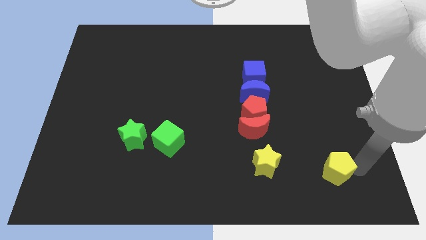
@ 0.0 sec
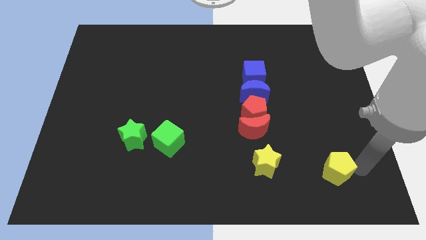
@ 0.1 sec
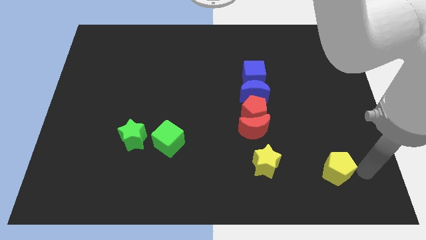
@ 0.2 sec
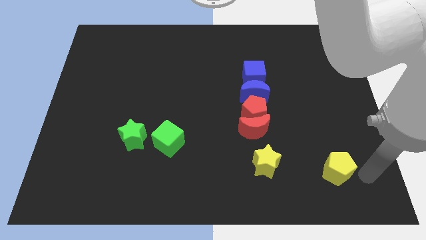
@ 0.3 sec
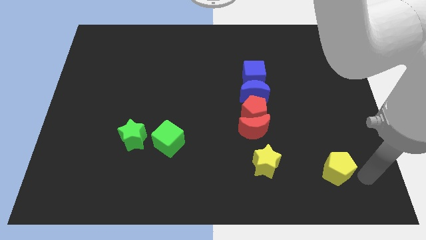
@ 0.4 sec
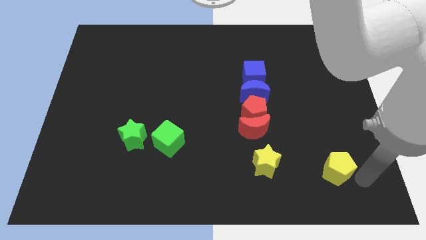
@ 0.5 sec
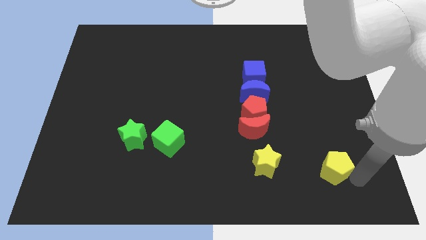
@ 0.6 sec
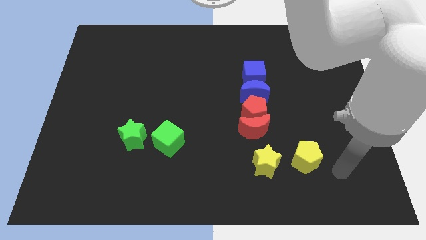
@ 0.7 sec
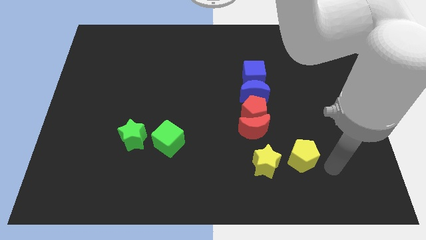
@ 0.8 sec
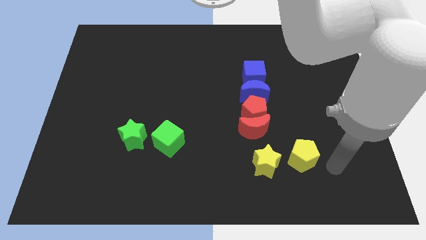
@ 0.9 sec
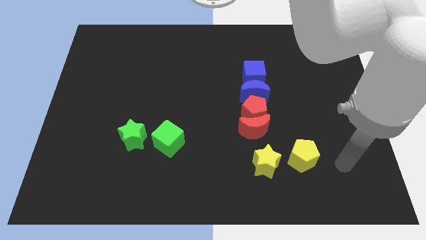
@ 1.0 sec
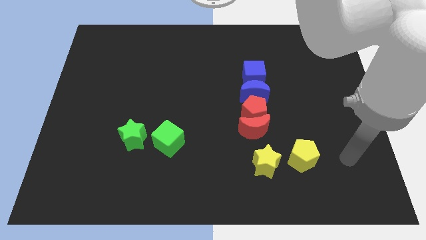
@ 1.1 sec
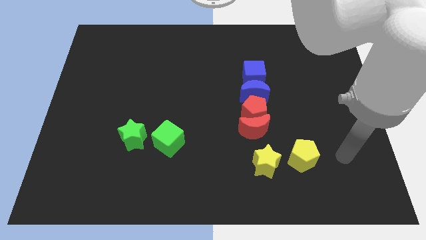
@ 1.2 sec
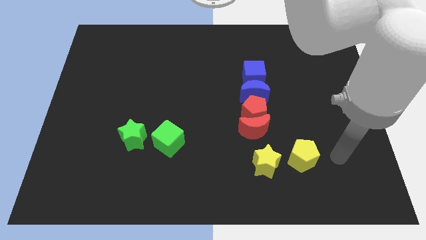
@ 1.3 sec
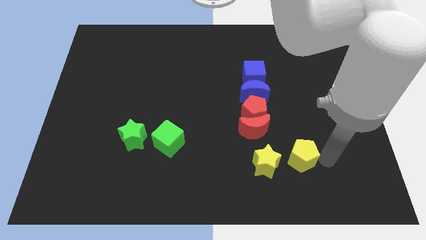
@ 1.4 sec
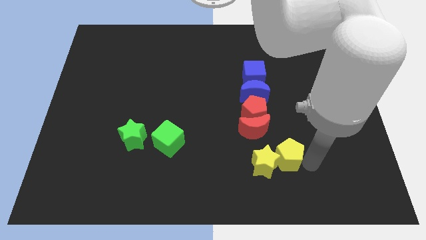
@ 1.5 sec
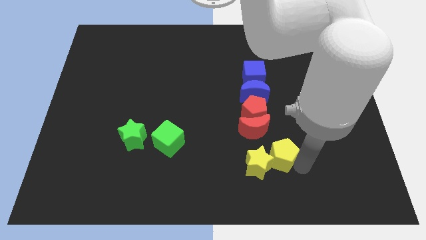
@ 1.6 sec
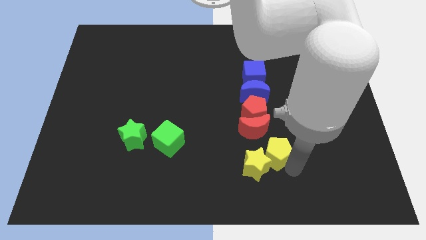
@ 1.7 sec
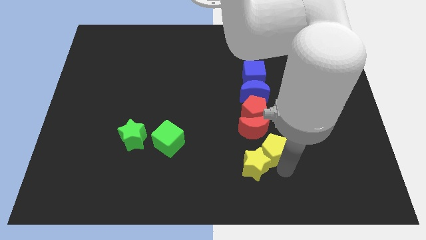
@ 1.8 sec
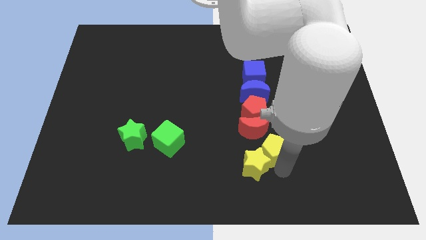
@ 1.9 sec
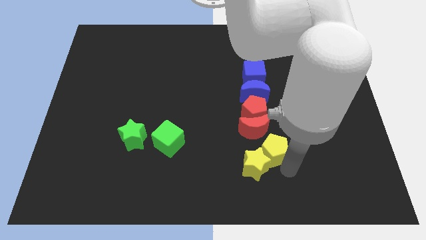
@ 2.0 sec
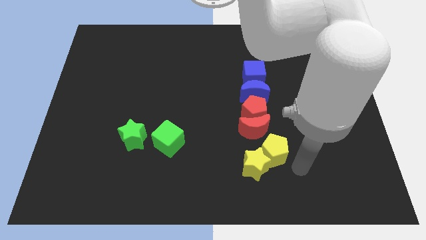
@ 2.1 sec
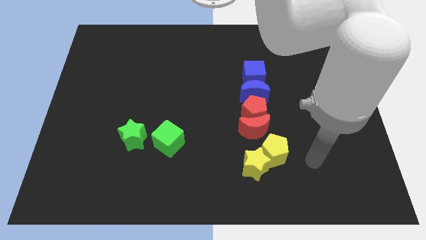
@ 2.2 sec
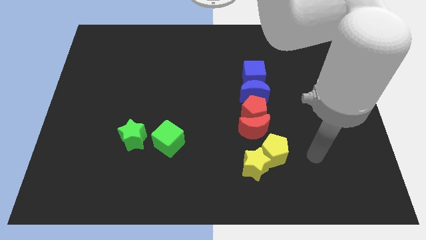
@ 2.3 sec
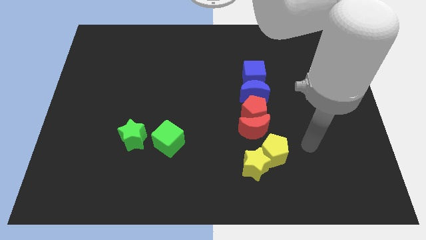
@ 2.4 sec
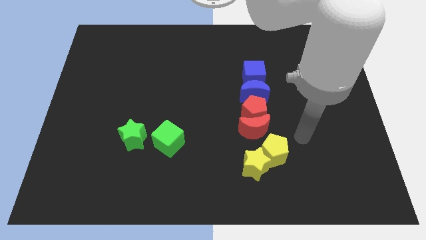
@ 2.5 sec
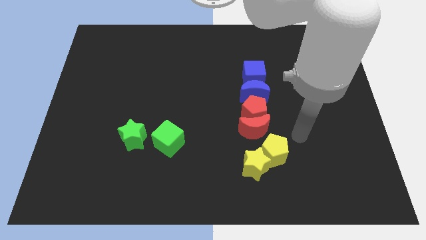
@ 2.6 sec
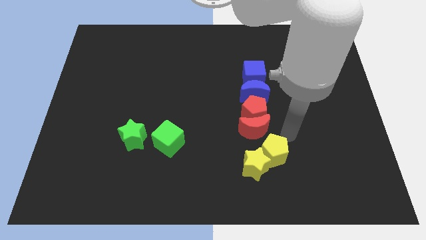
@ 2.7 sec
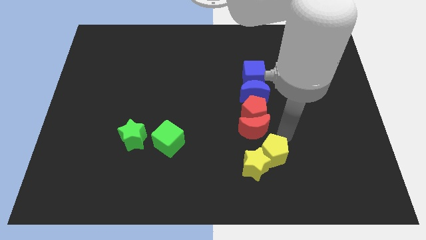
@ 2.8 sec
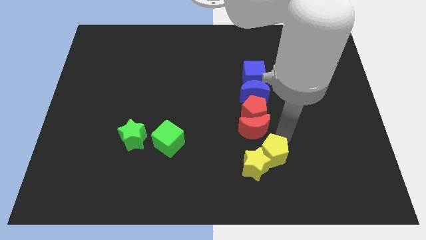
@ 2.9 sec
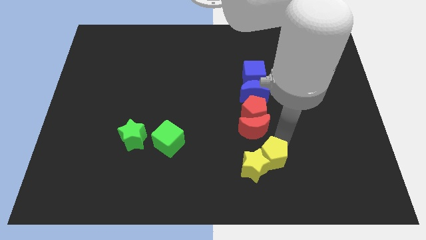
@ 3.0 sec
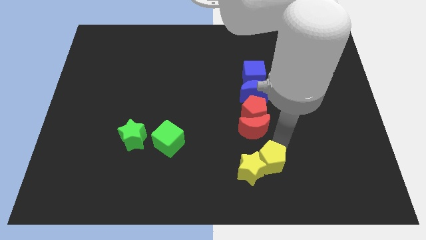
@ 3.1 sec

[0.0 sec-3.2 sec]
place yellow blocks below to the red blocks

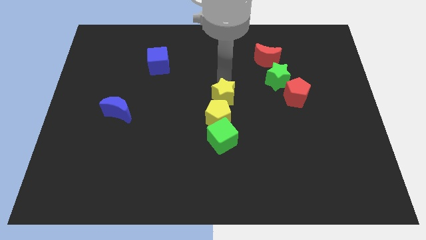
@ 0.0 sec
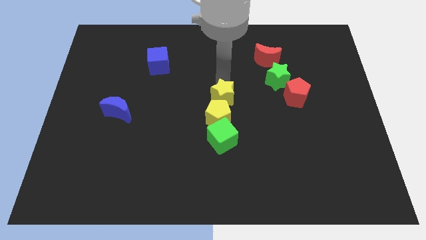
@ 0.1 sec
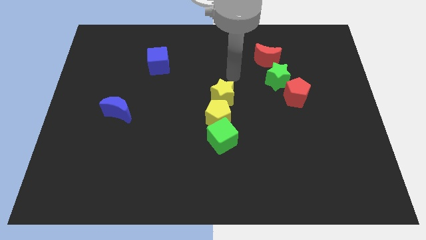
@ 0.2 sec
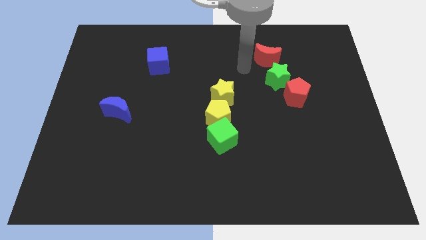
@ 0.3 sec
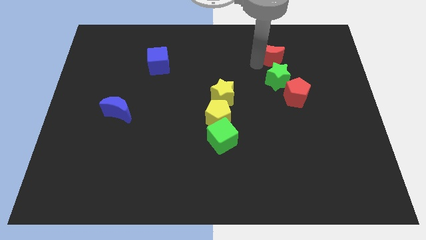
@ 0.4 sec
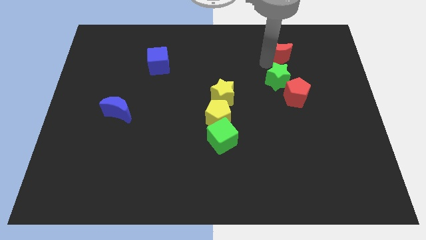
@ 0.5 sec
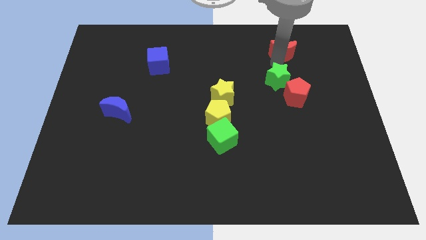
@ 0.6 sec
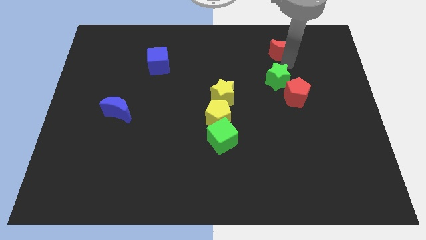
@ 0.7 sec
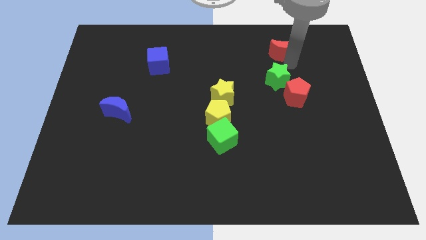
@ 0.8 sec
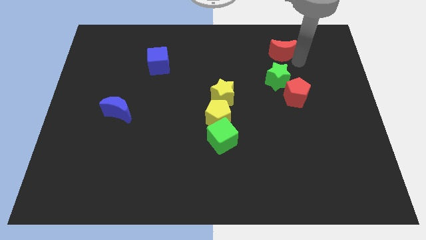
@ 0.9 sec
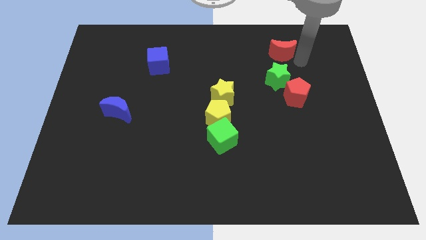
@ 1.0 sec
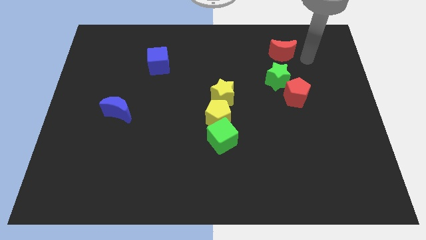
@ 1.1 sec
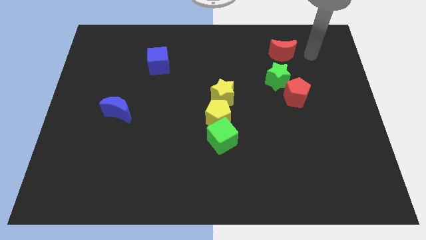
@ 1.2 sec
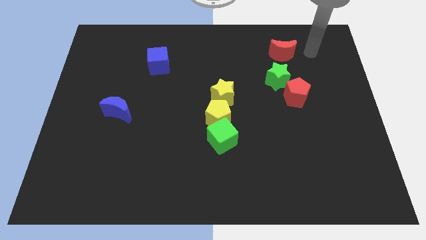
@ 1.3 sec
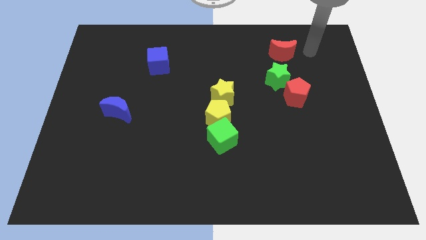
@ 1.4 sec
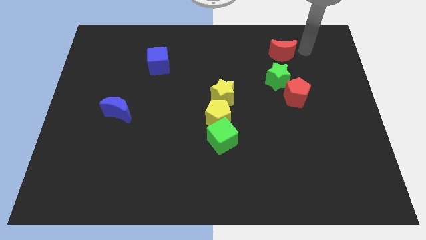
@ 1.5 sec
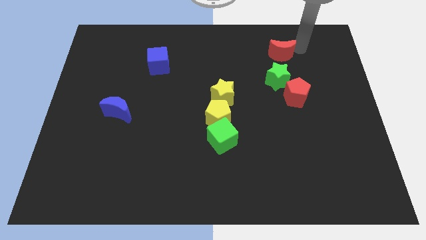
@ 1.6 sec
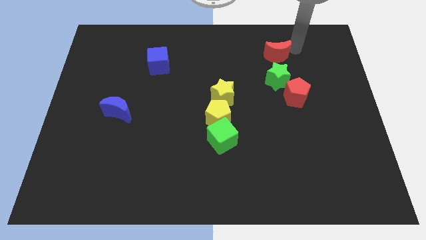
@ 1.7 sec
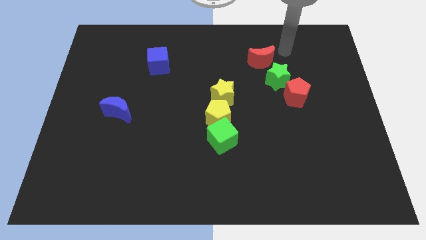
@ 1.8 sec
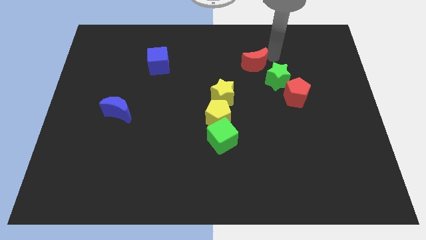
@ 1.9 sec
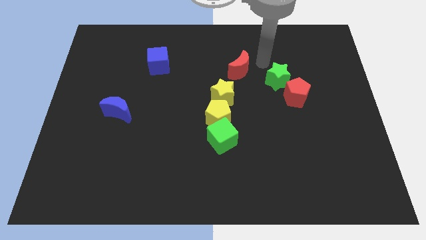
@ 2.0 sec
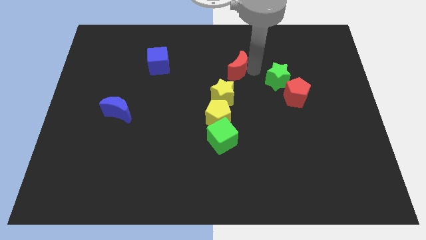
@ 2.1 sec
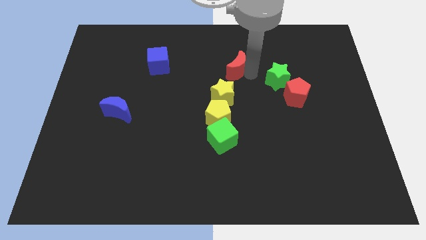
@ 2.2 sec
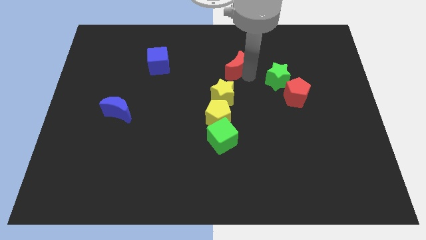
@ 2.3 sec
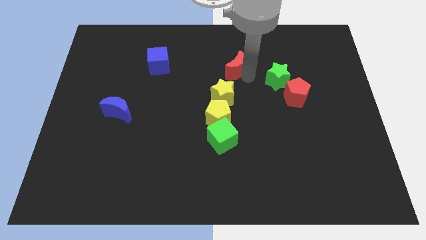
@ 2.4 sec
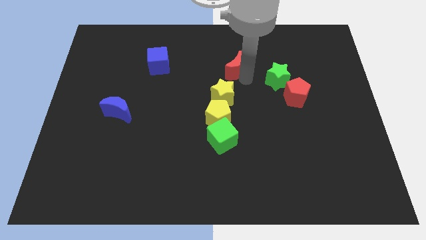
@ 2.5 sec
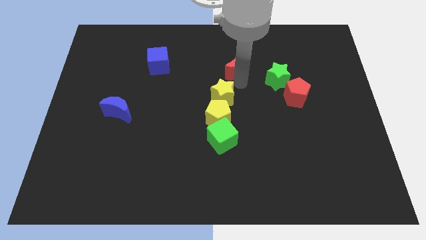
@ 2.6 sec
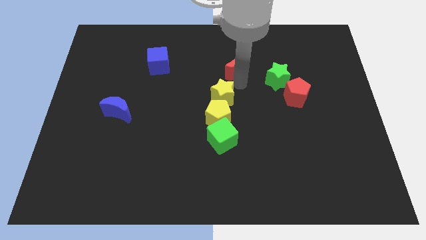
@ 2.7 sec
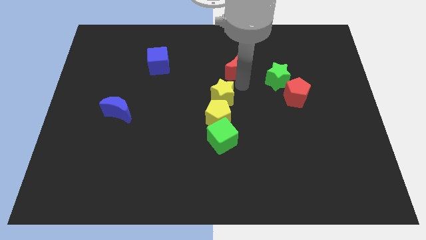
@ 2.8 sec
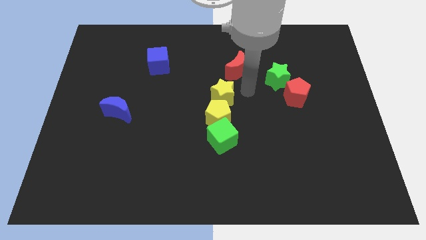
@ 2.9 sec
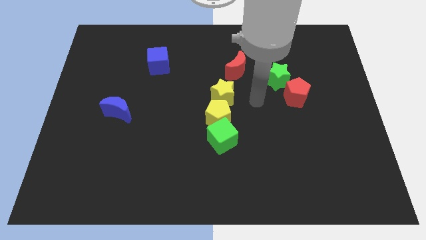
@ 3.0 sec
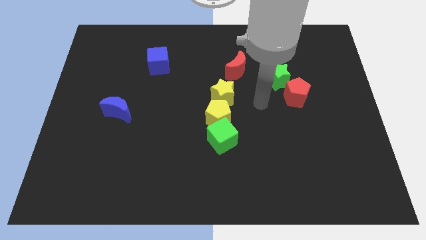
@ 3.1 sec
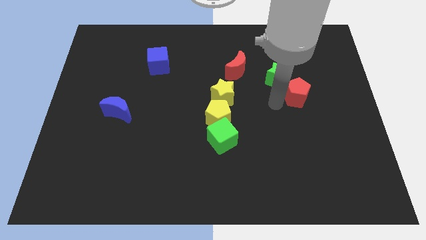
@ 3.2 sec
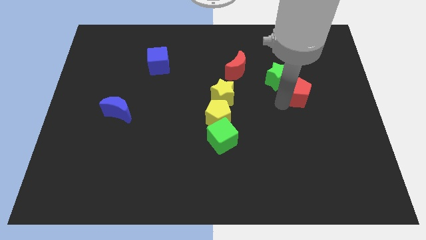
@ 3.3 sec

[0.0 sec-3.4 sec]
move the red crescent above the yellow star

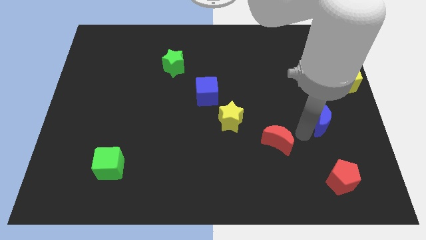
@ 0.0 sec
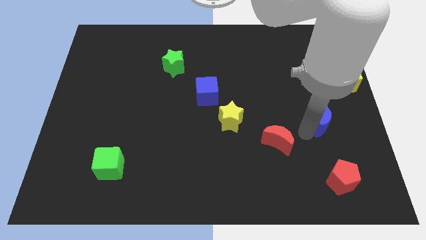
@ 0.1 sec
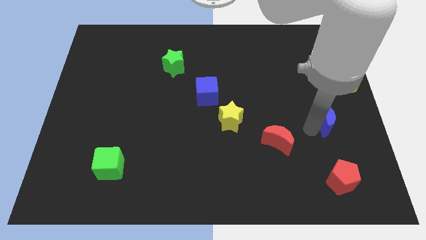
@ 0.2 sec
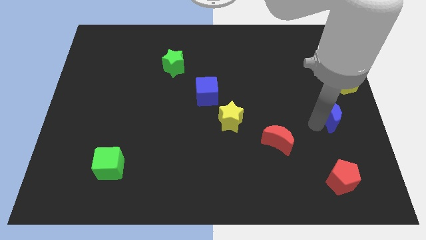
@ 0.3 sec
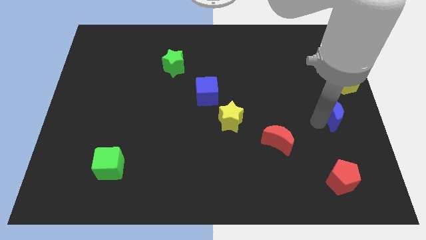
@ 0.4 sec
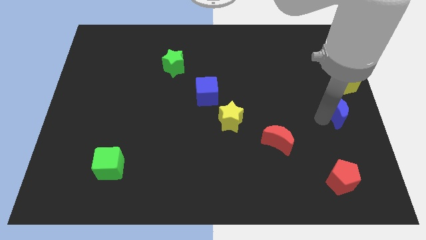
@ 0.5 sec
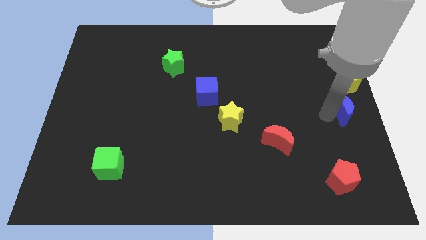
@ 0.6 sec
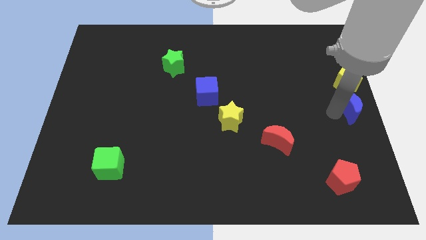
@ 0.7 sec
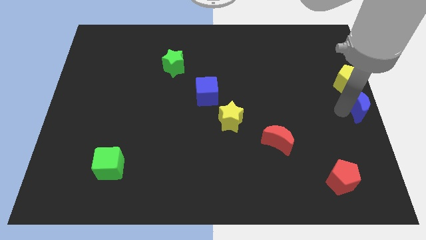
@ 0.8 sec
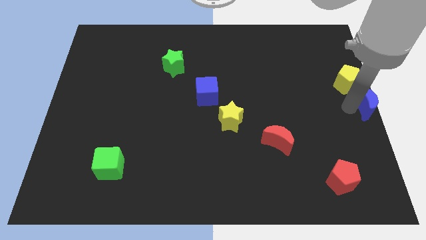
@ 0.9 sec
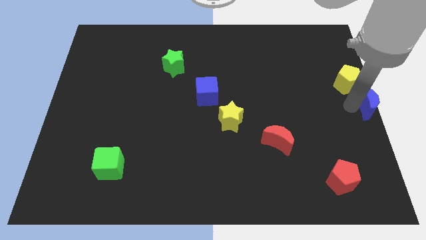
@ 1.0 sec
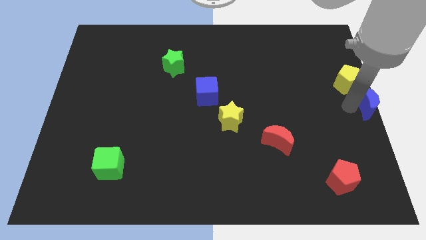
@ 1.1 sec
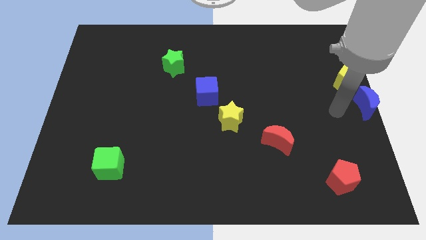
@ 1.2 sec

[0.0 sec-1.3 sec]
put the blue crescent underneath the yellow pentagon

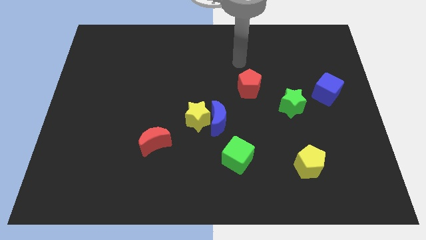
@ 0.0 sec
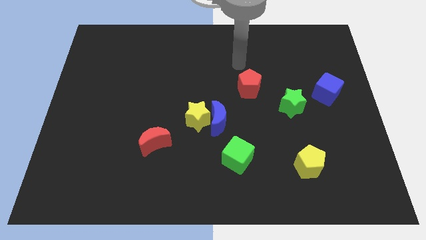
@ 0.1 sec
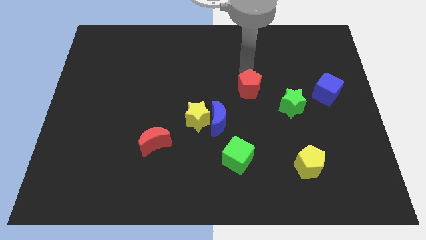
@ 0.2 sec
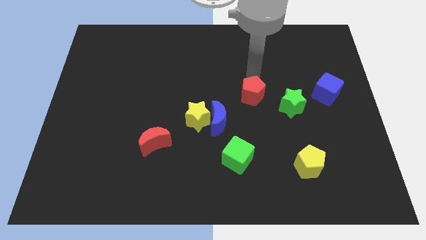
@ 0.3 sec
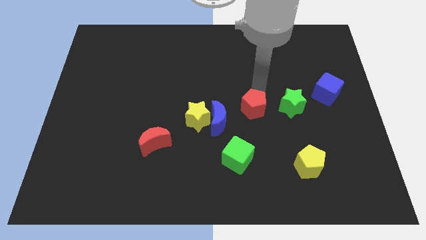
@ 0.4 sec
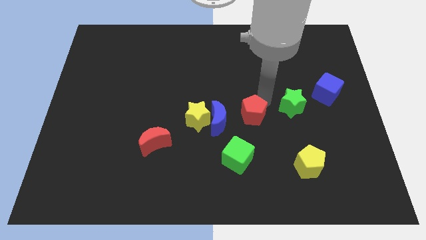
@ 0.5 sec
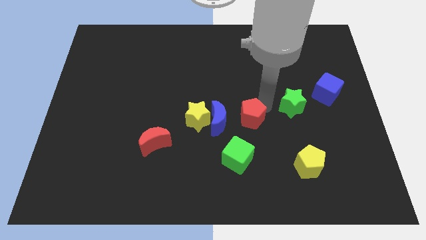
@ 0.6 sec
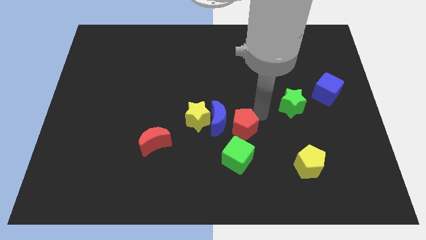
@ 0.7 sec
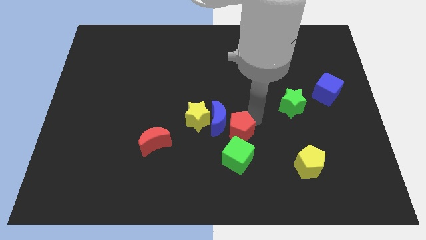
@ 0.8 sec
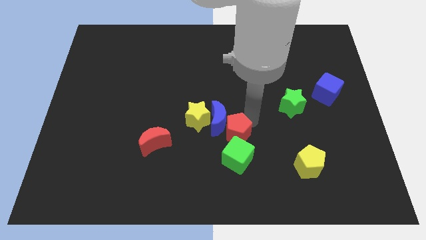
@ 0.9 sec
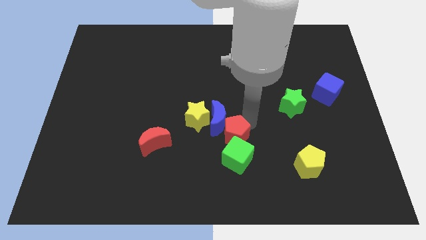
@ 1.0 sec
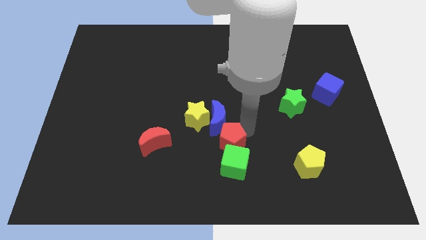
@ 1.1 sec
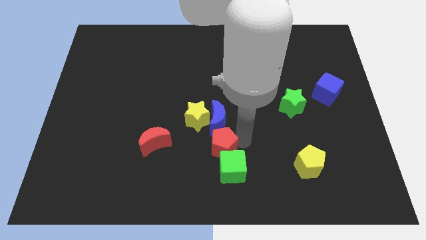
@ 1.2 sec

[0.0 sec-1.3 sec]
place the red pentagon on top of green cube
